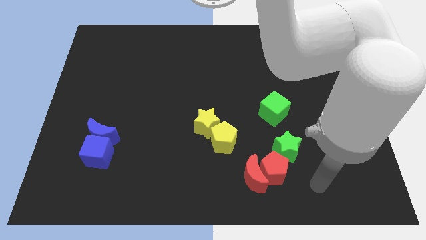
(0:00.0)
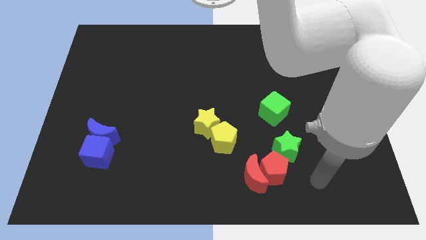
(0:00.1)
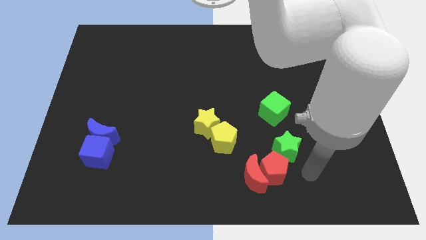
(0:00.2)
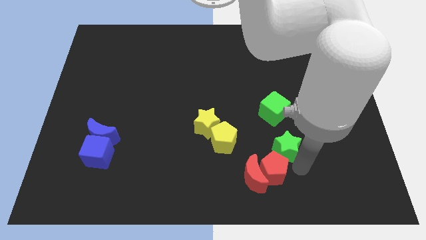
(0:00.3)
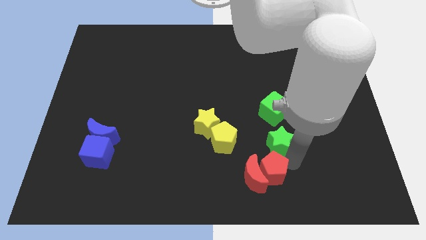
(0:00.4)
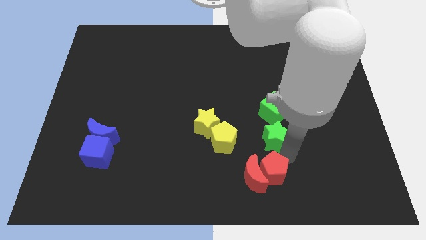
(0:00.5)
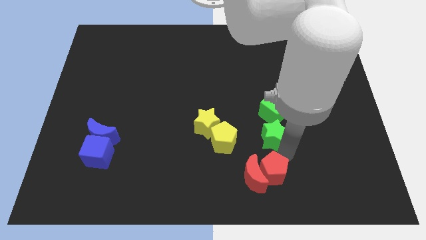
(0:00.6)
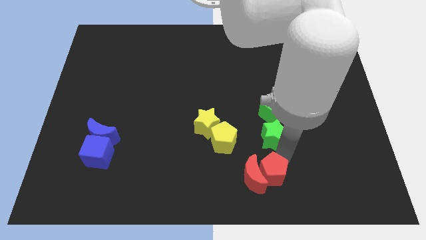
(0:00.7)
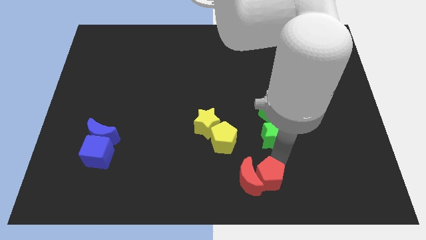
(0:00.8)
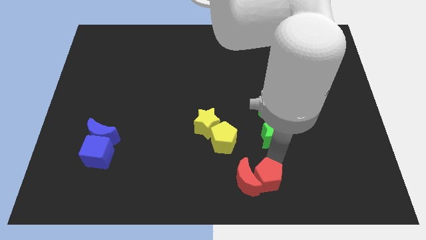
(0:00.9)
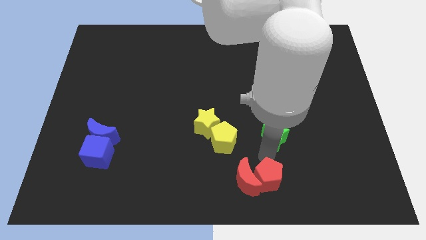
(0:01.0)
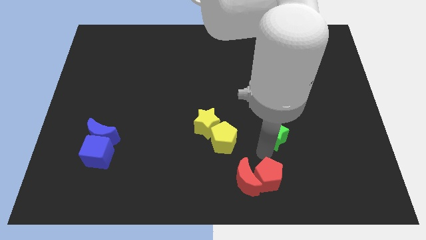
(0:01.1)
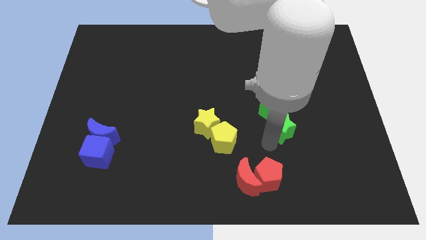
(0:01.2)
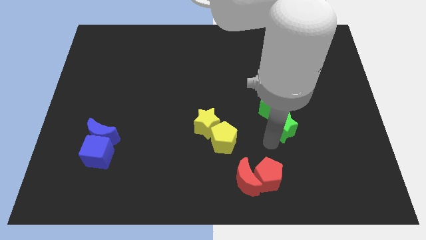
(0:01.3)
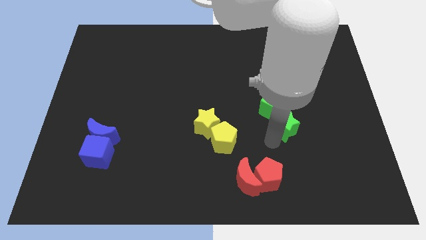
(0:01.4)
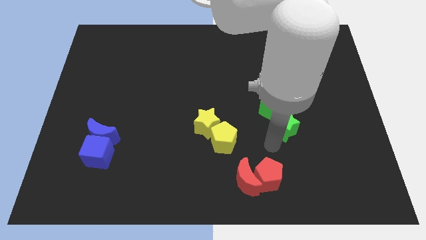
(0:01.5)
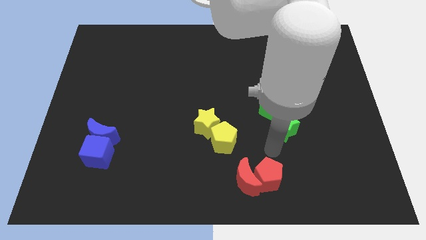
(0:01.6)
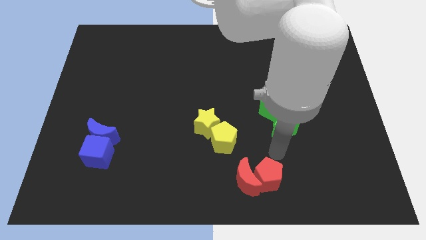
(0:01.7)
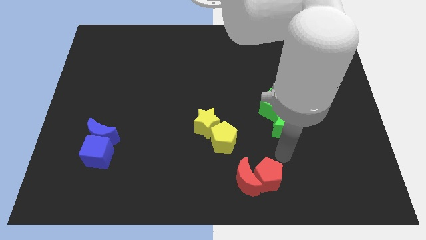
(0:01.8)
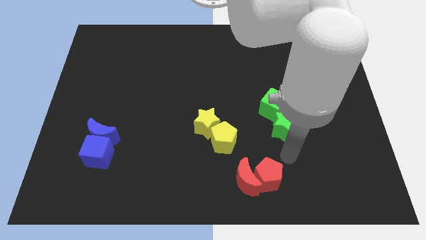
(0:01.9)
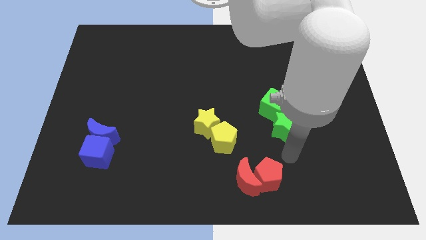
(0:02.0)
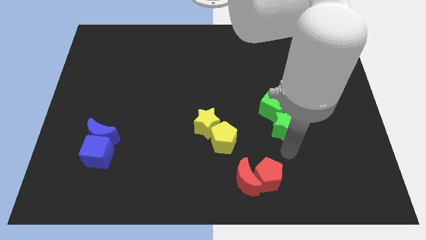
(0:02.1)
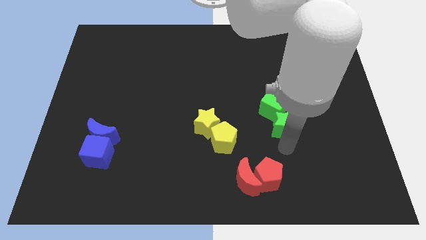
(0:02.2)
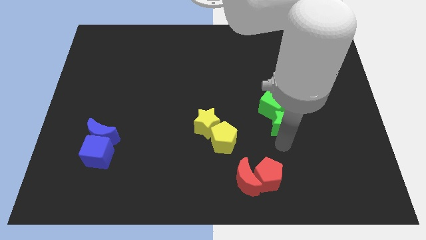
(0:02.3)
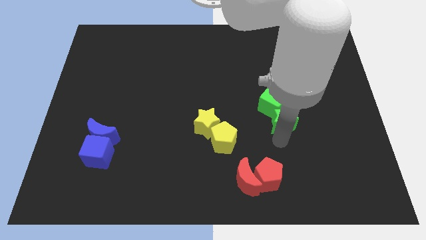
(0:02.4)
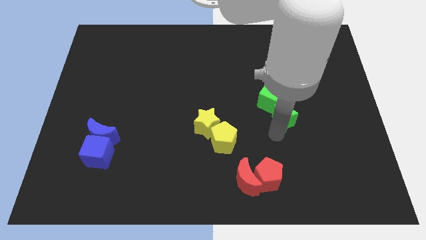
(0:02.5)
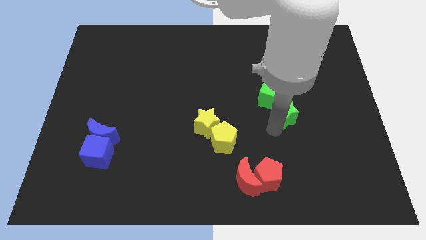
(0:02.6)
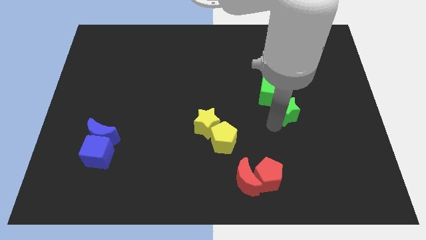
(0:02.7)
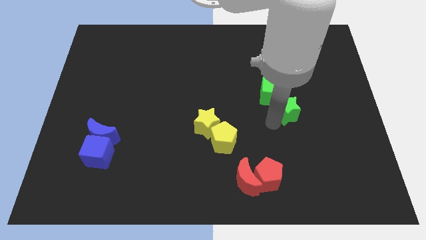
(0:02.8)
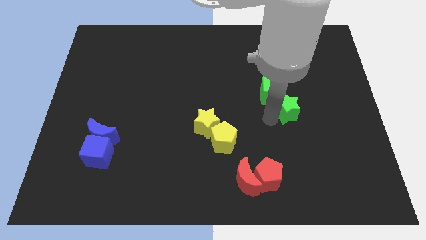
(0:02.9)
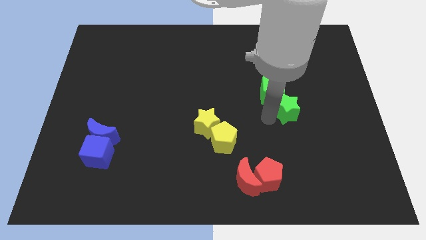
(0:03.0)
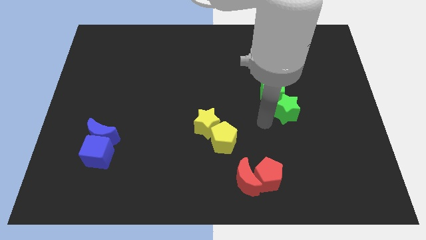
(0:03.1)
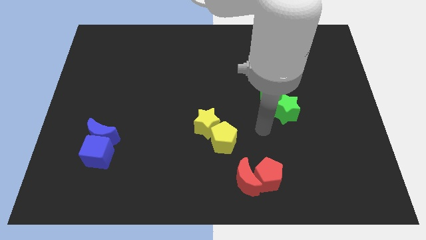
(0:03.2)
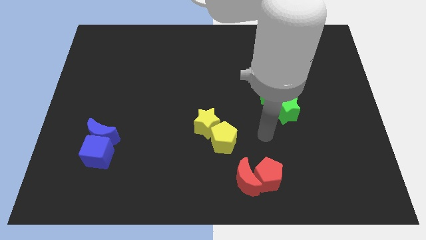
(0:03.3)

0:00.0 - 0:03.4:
separate the green star with red pentagon

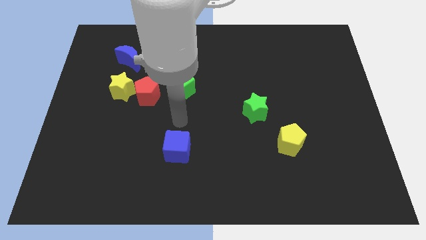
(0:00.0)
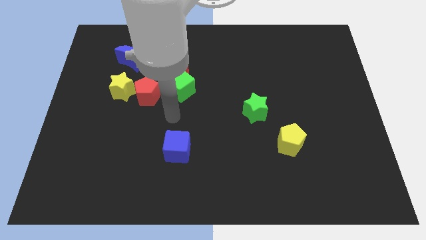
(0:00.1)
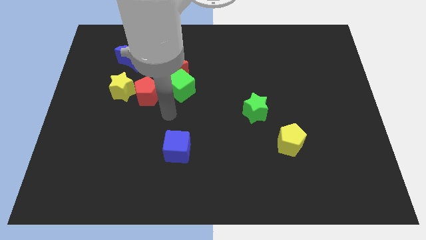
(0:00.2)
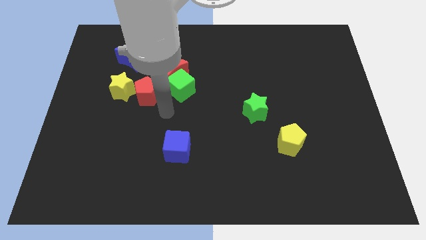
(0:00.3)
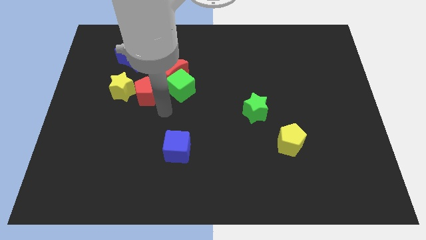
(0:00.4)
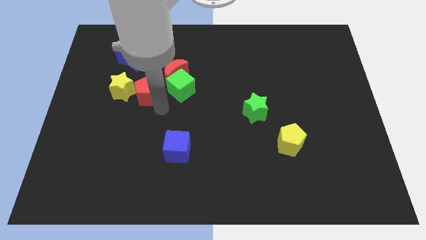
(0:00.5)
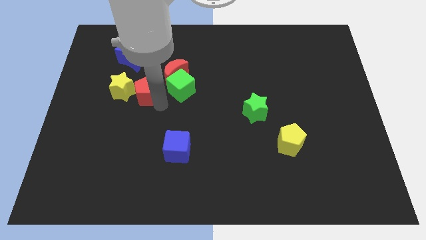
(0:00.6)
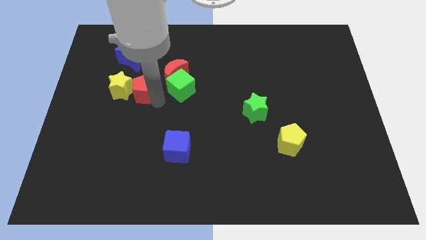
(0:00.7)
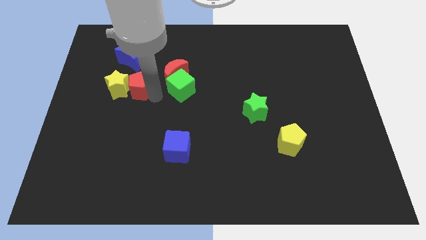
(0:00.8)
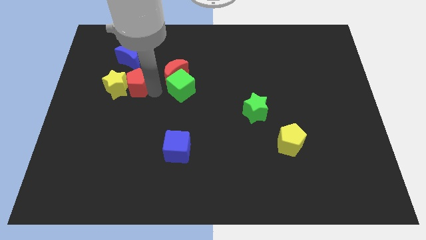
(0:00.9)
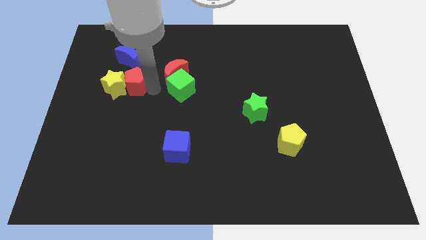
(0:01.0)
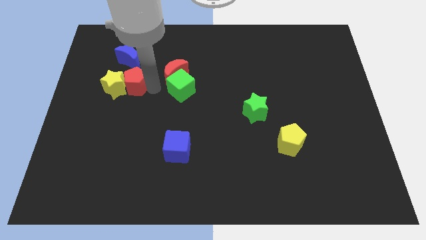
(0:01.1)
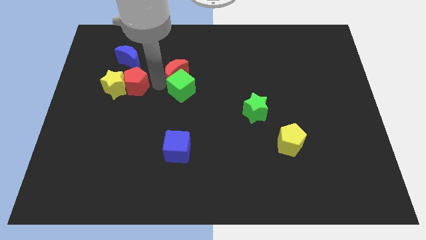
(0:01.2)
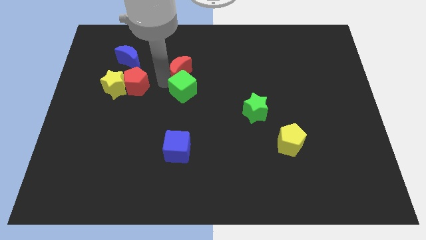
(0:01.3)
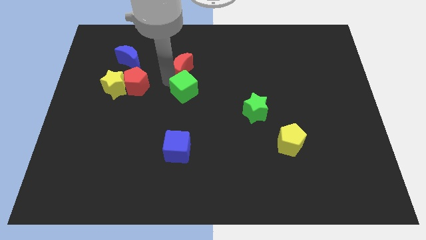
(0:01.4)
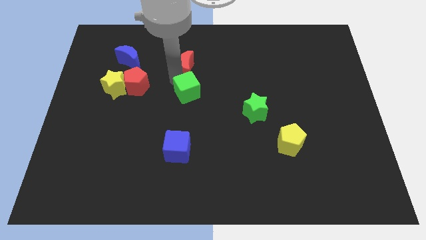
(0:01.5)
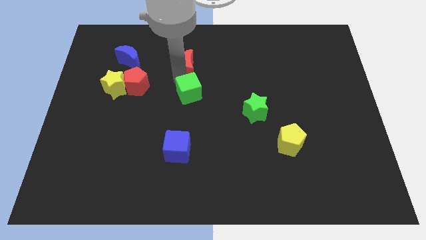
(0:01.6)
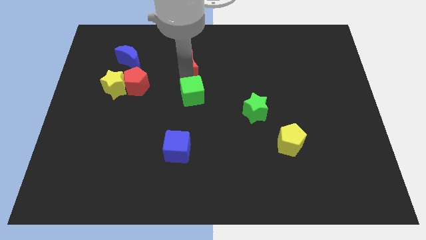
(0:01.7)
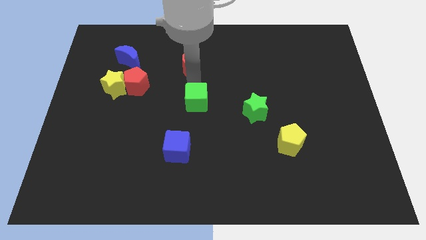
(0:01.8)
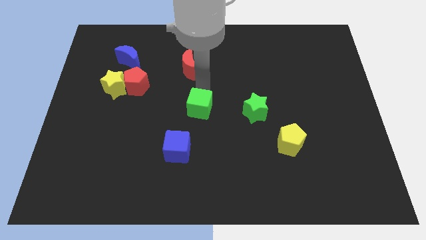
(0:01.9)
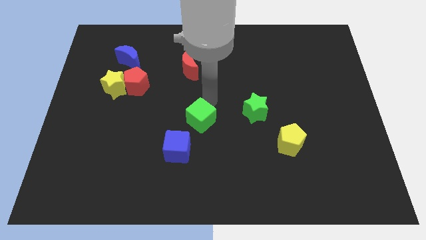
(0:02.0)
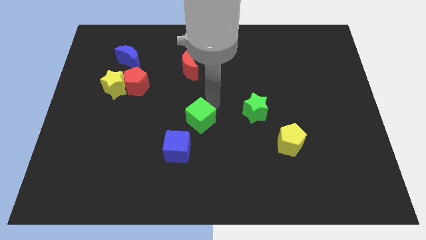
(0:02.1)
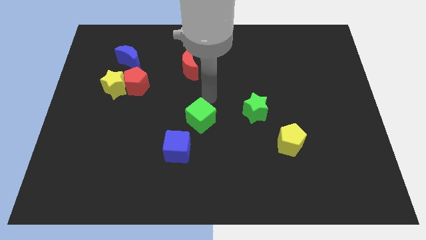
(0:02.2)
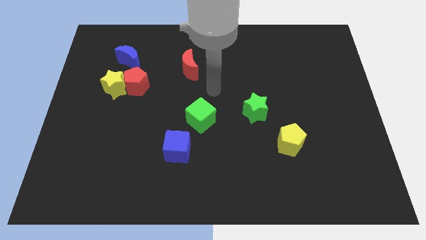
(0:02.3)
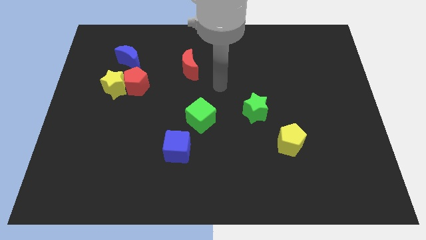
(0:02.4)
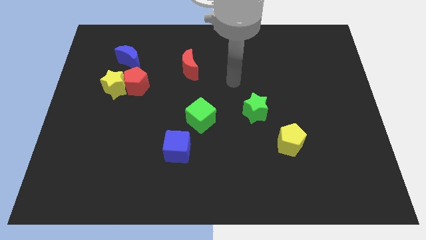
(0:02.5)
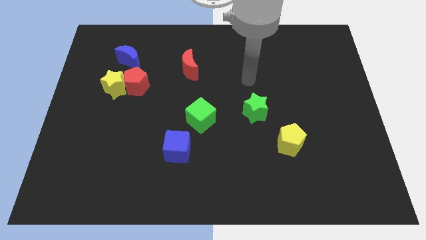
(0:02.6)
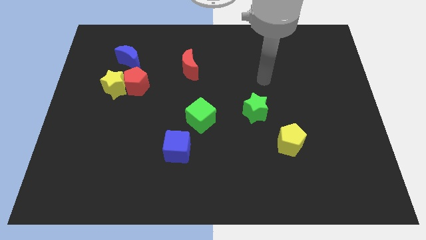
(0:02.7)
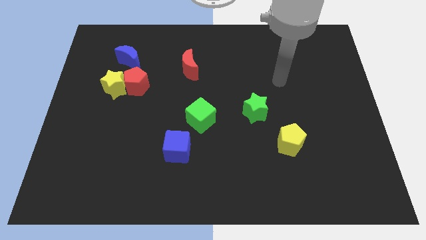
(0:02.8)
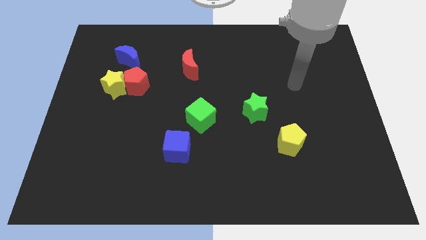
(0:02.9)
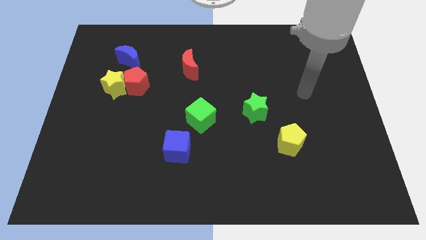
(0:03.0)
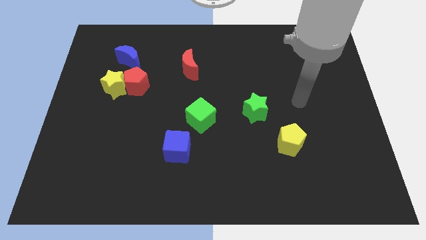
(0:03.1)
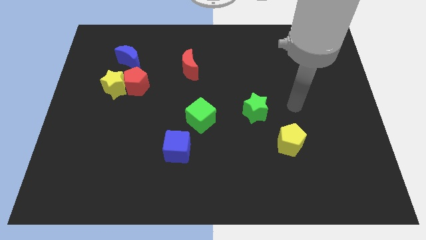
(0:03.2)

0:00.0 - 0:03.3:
adjust the green cube and both red blocks to form a triangle of blocks

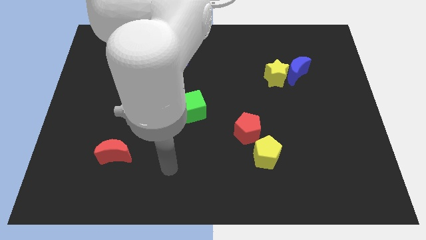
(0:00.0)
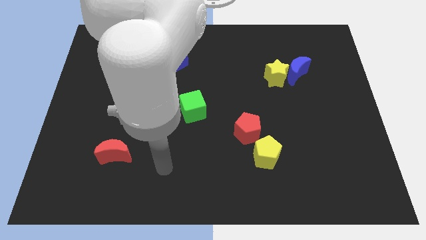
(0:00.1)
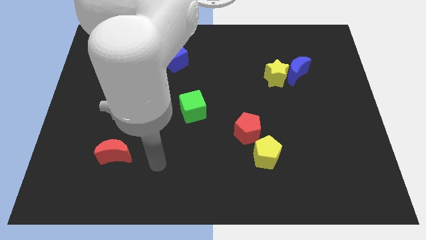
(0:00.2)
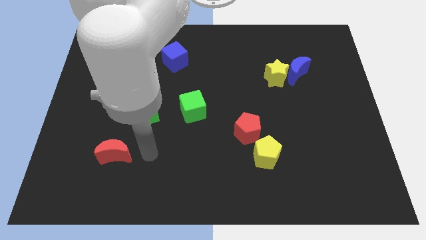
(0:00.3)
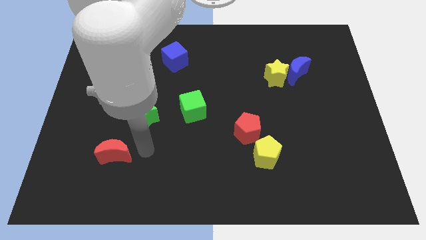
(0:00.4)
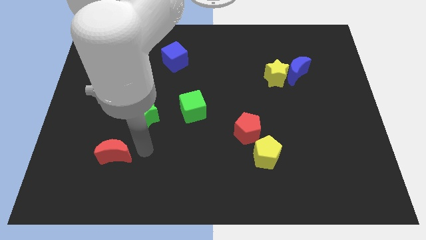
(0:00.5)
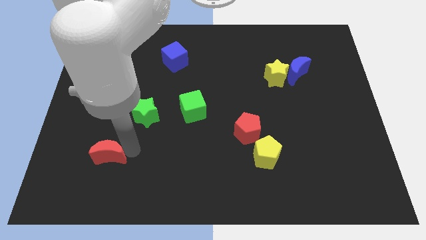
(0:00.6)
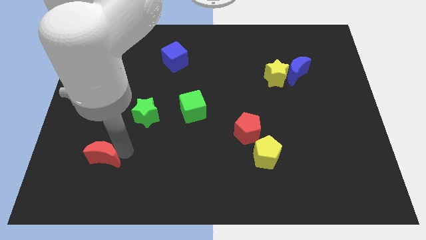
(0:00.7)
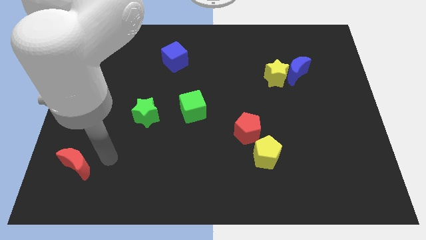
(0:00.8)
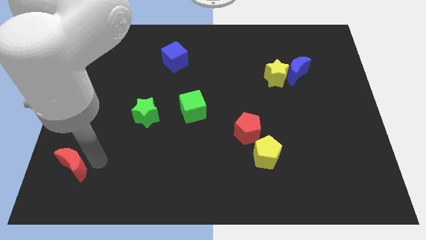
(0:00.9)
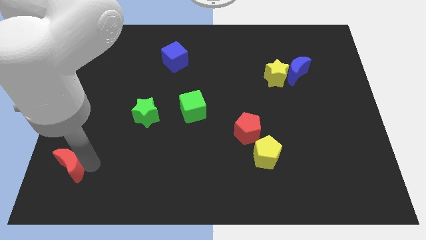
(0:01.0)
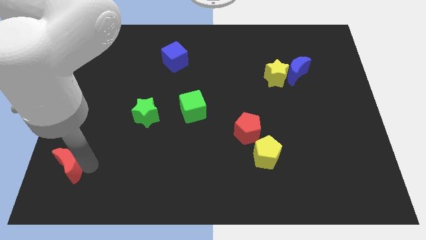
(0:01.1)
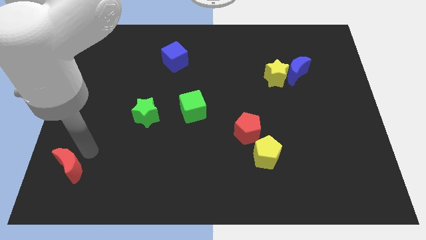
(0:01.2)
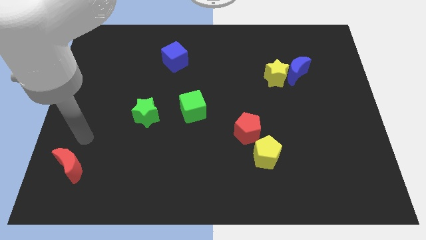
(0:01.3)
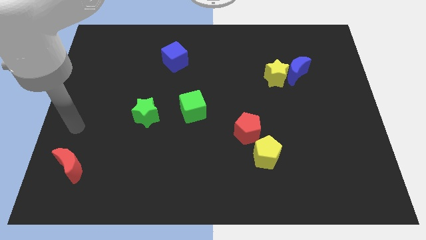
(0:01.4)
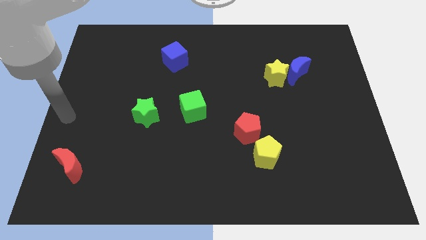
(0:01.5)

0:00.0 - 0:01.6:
move the red moon to the bottom left

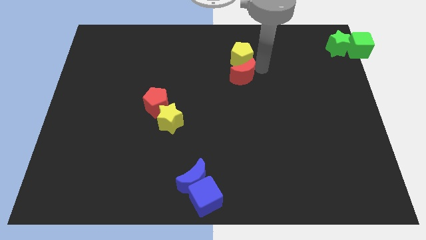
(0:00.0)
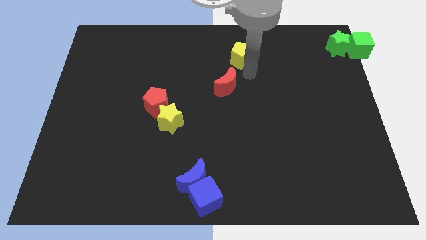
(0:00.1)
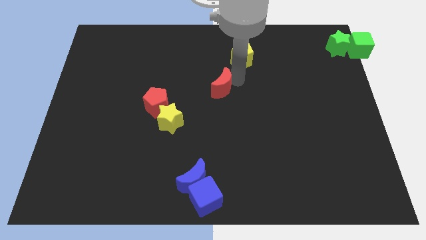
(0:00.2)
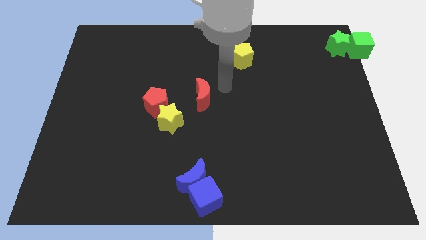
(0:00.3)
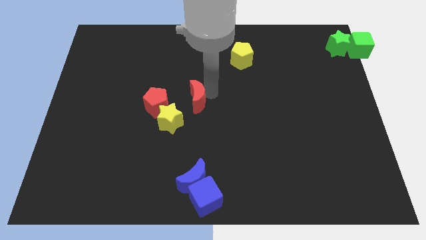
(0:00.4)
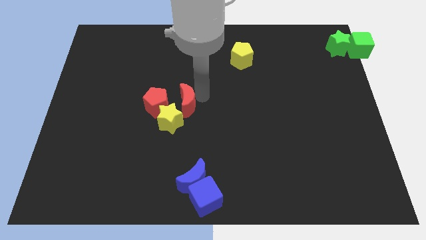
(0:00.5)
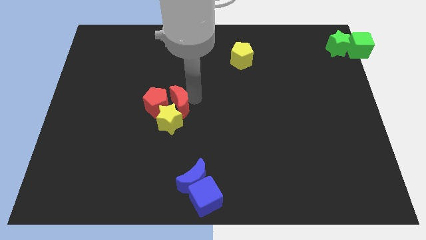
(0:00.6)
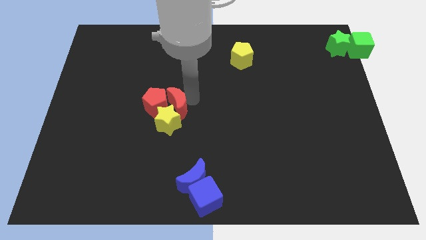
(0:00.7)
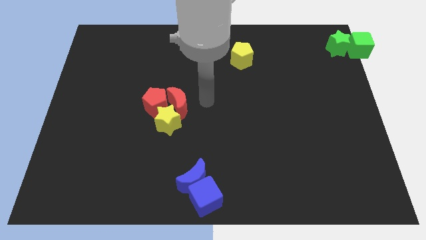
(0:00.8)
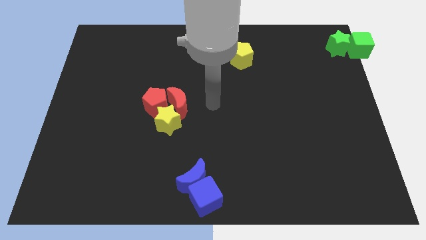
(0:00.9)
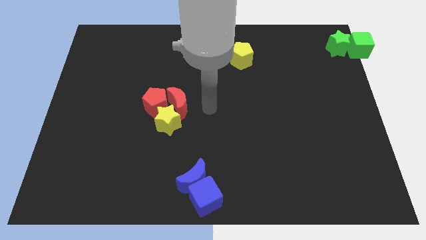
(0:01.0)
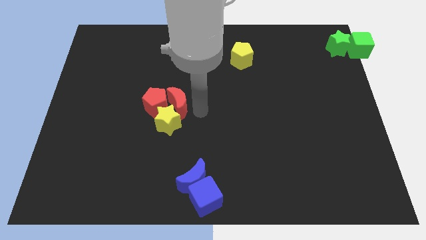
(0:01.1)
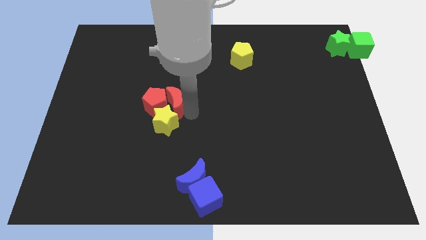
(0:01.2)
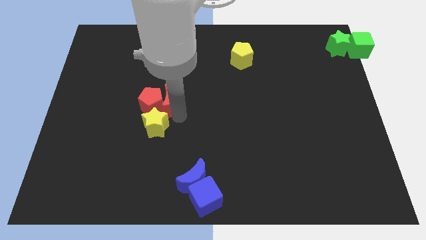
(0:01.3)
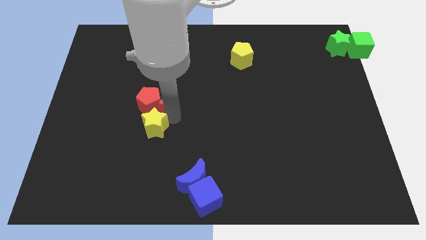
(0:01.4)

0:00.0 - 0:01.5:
drag red crescent right to red pentagon
